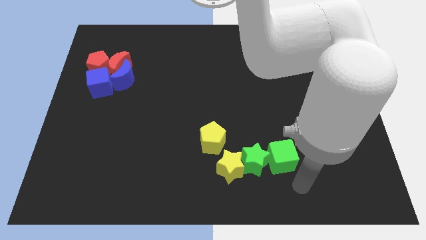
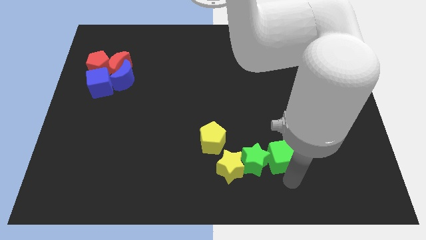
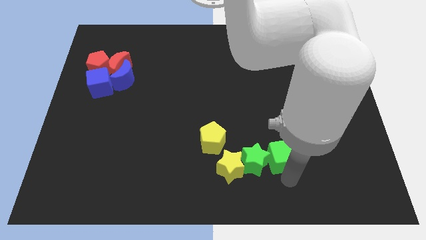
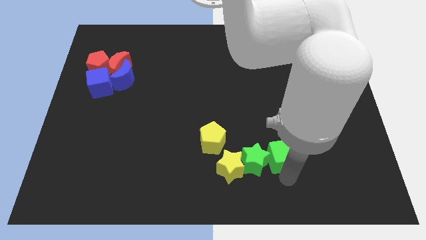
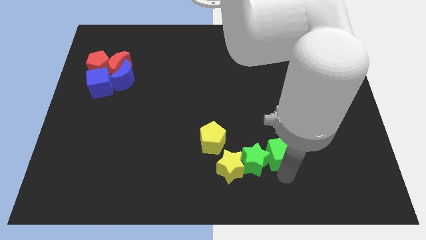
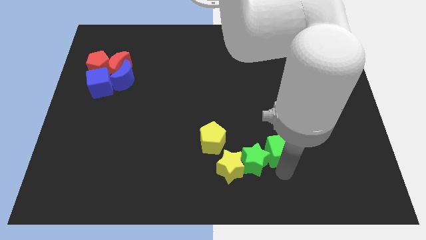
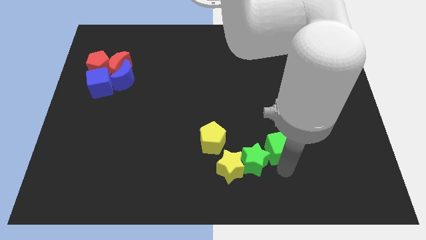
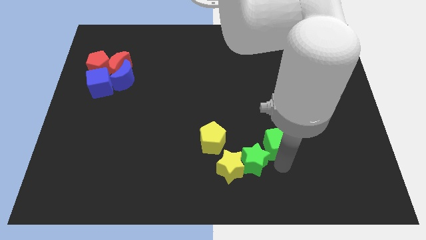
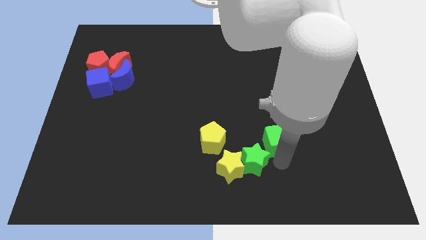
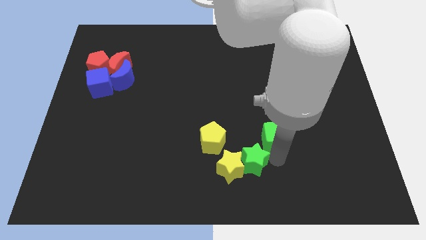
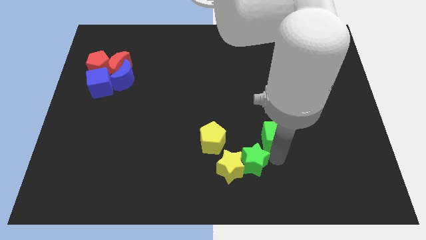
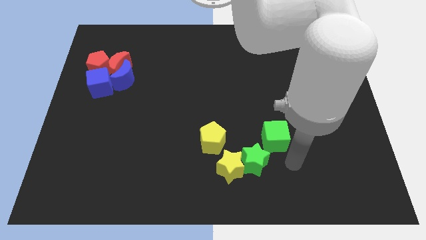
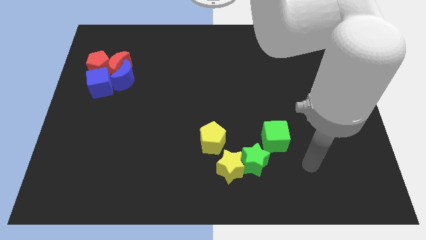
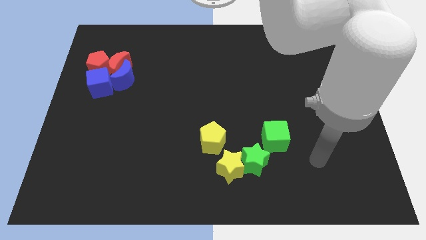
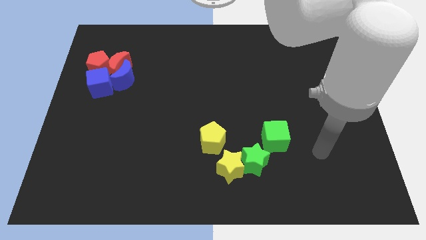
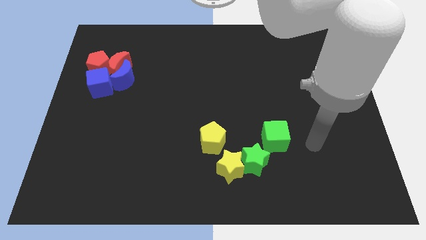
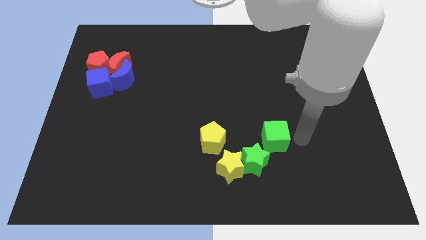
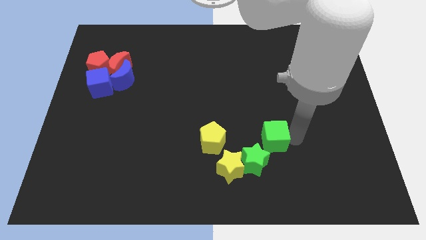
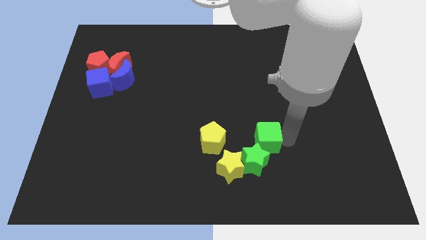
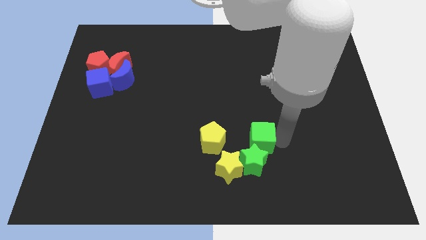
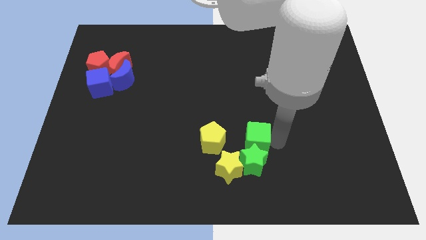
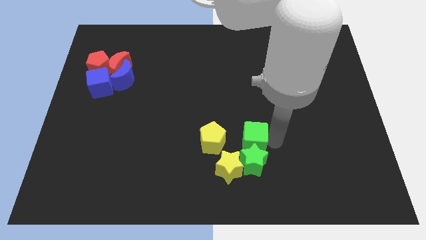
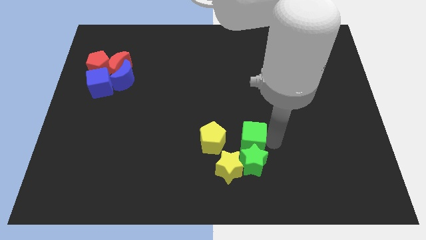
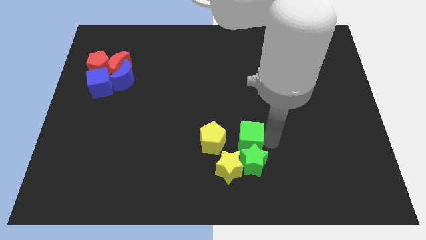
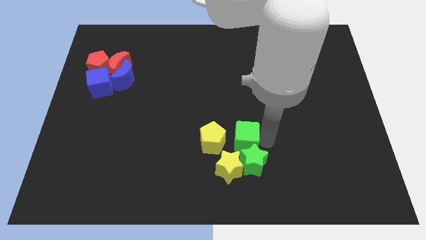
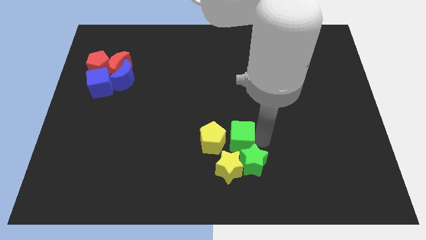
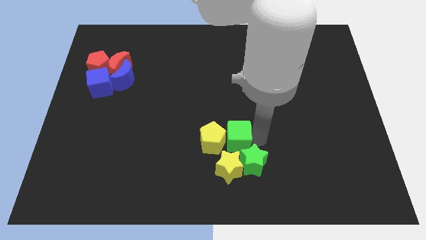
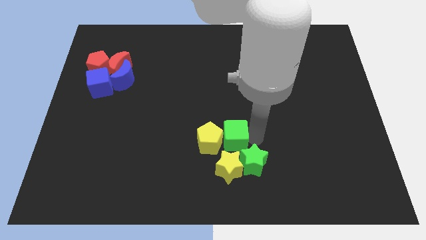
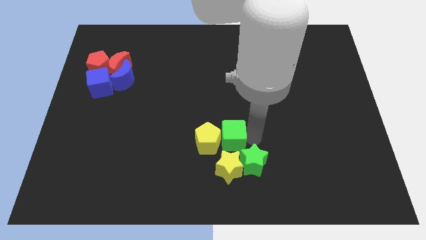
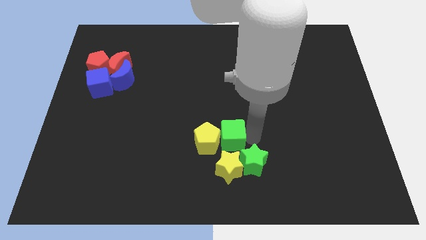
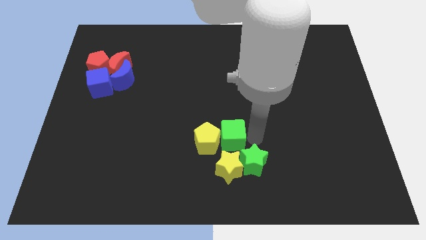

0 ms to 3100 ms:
slide the green cube into the right side of the yellow pentagon

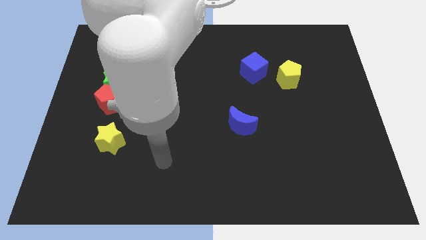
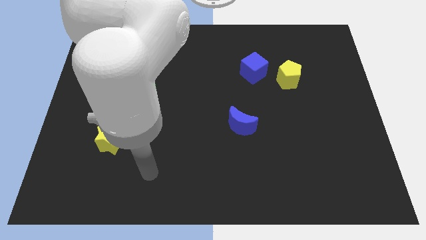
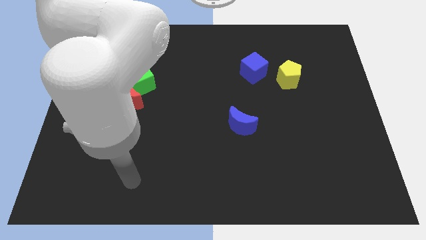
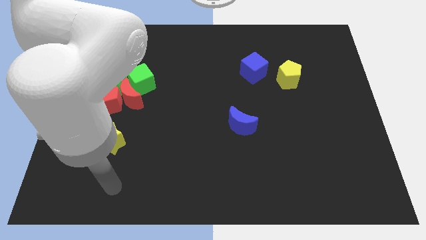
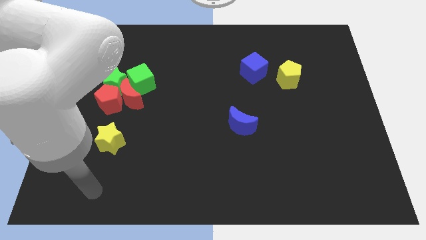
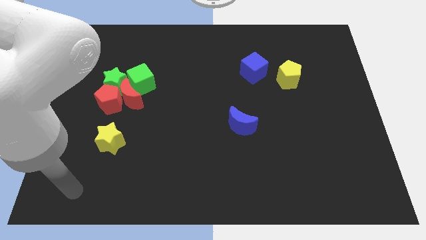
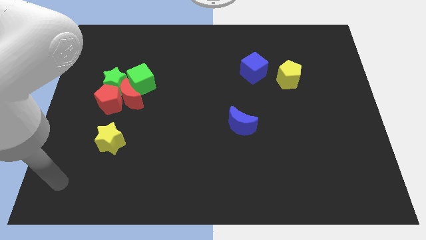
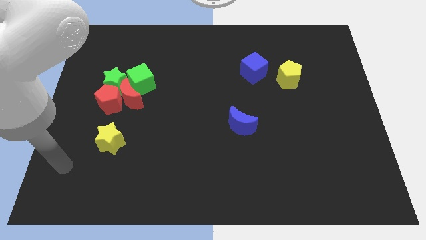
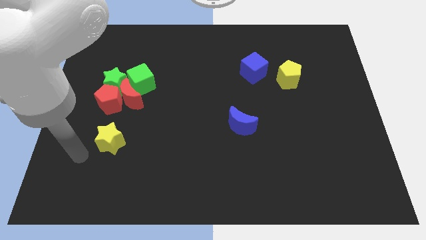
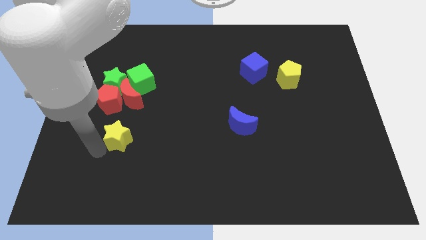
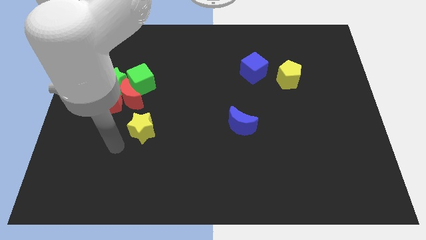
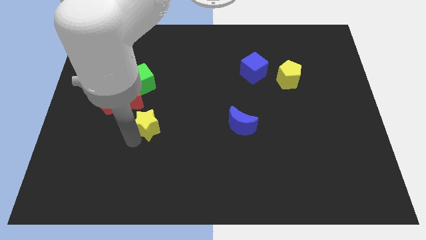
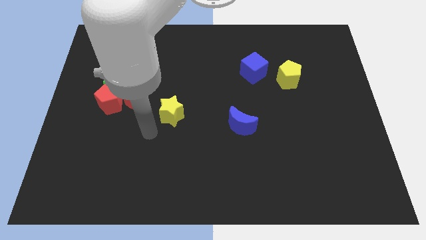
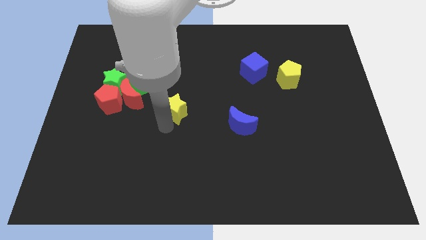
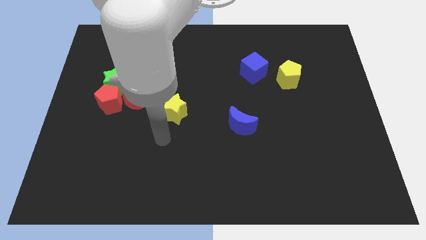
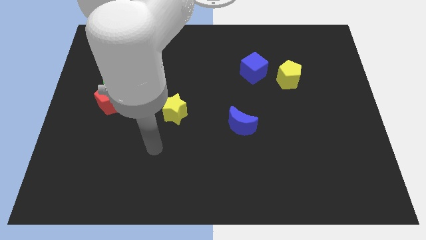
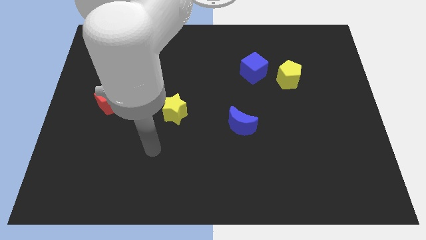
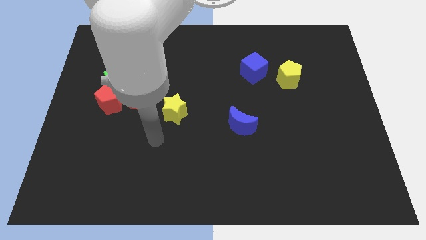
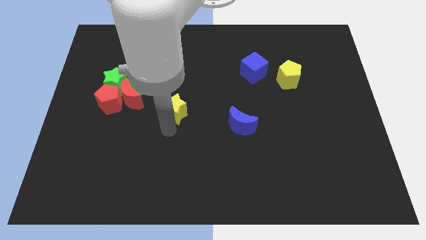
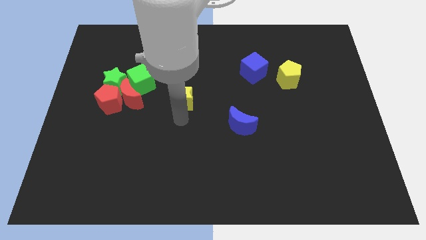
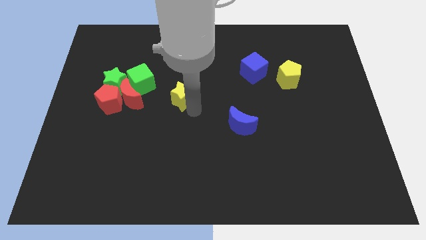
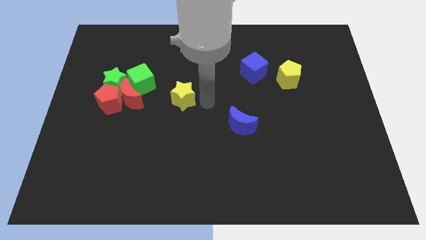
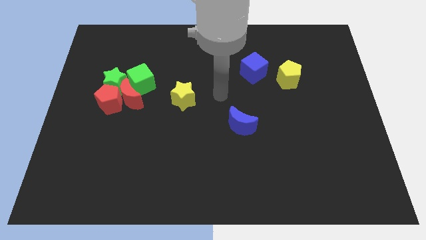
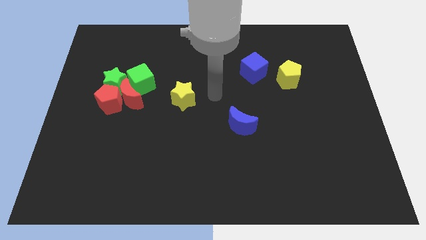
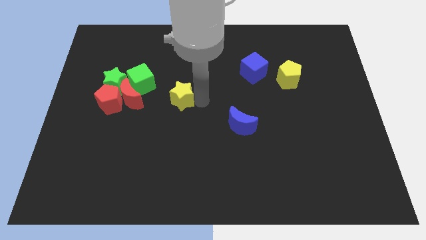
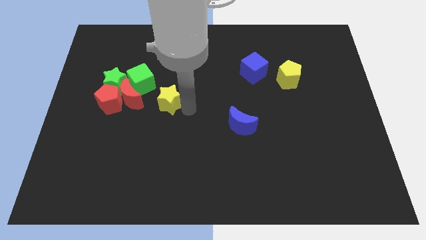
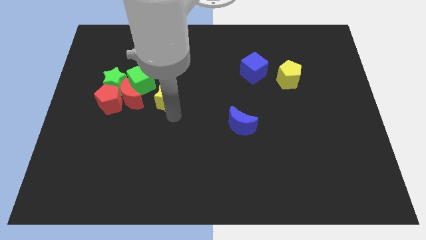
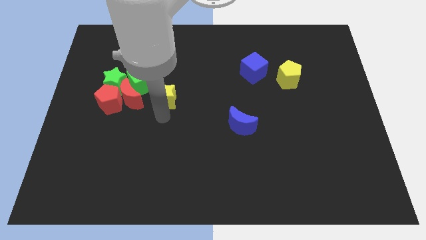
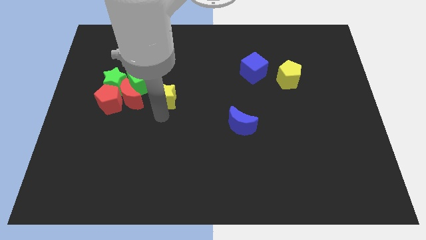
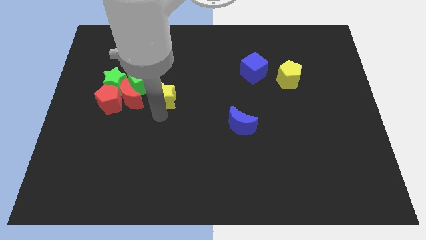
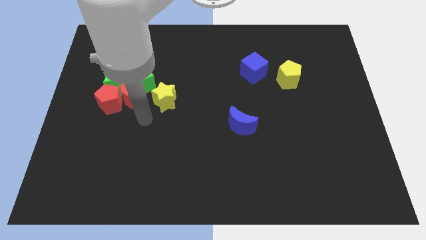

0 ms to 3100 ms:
move the yellow star to the bottom right of the green cube

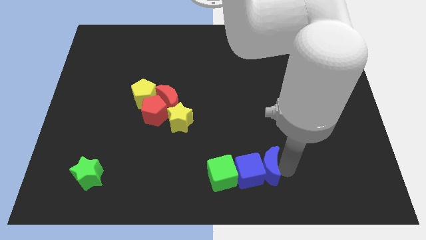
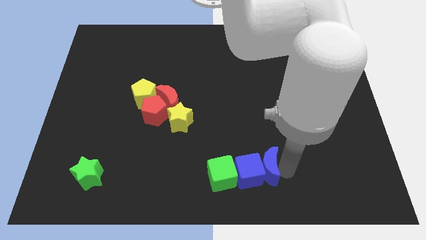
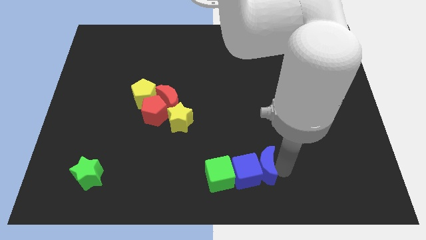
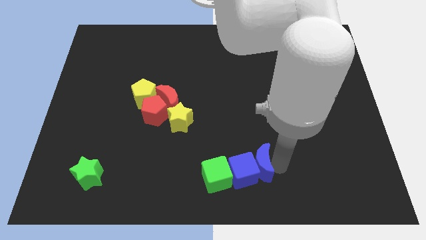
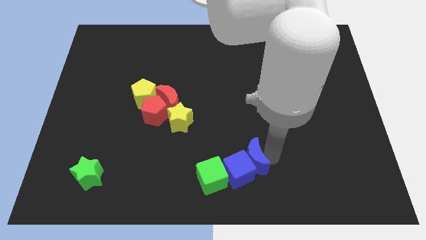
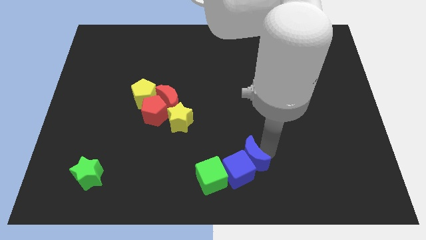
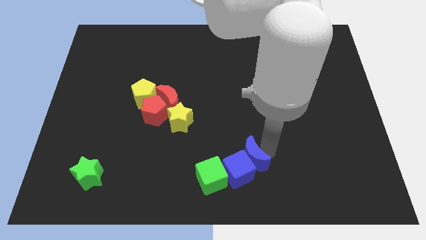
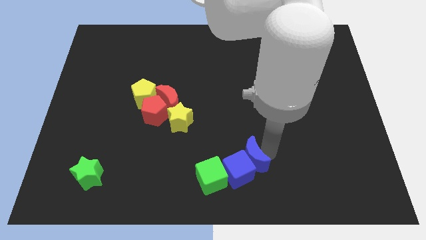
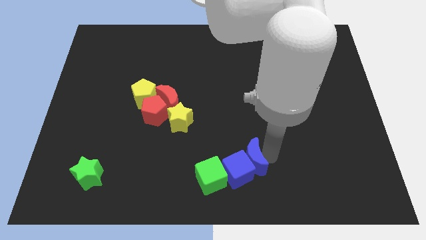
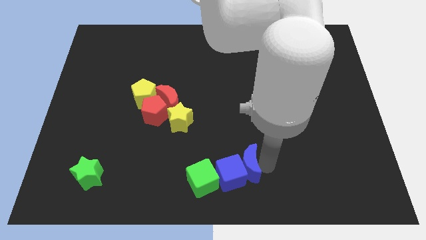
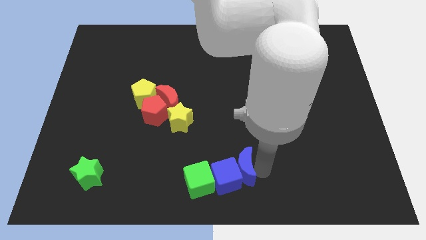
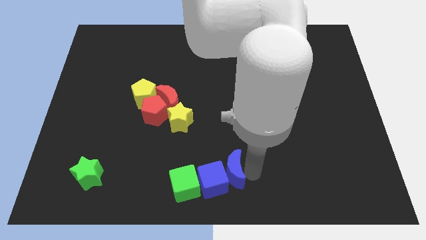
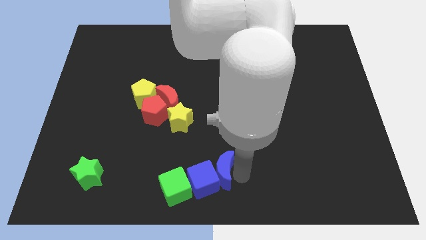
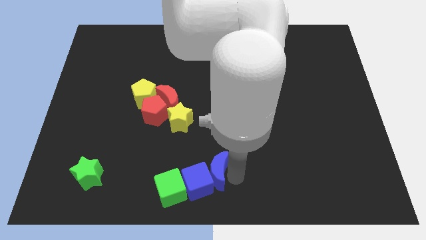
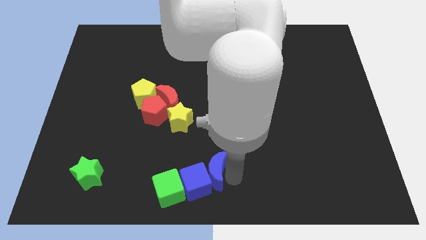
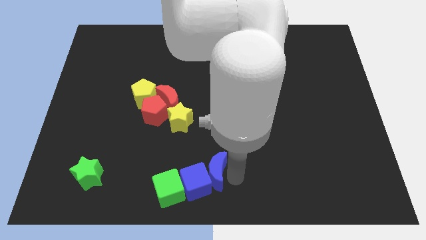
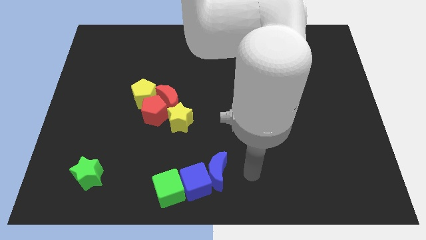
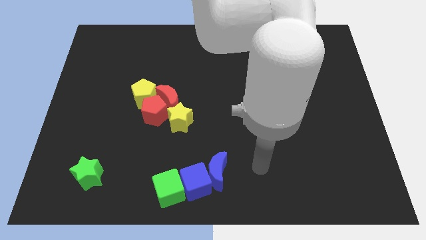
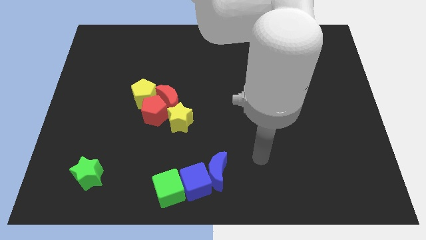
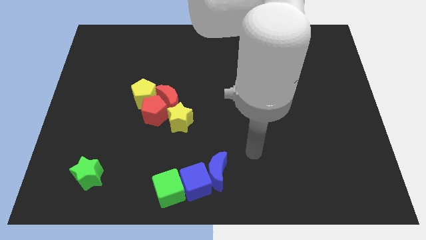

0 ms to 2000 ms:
push green and blue blocks with blue crescent

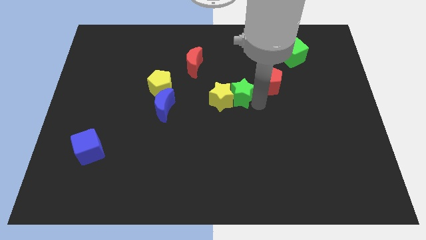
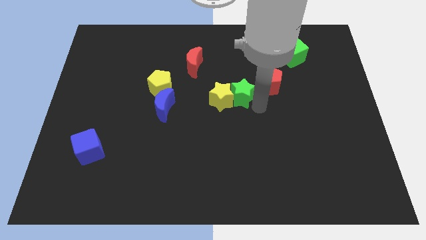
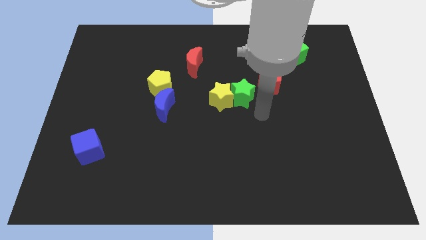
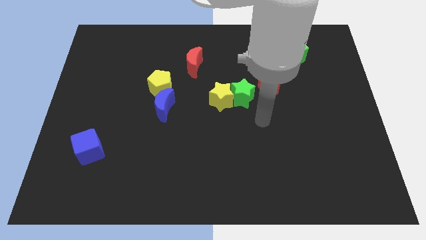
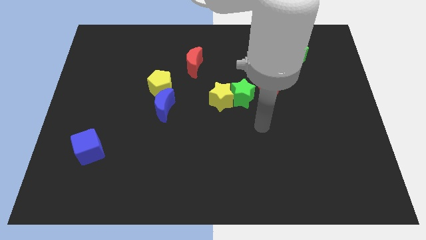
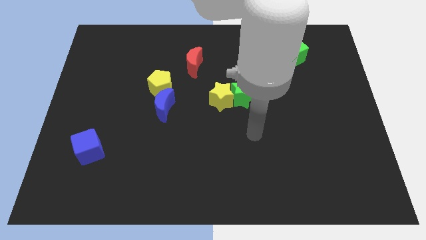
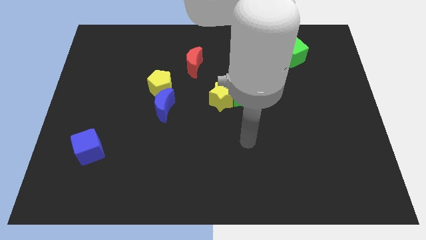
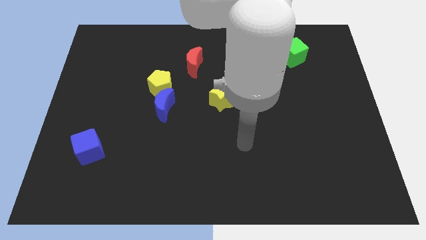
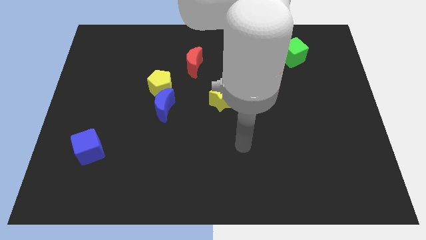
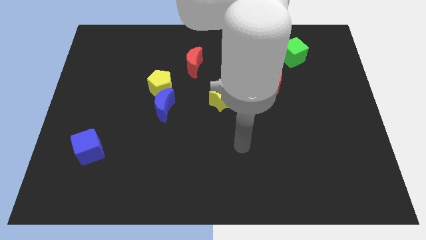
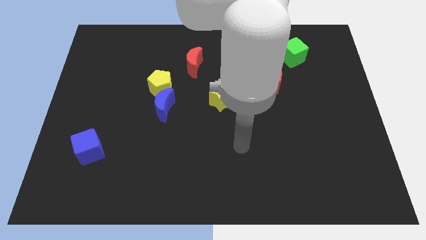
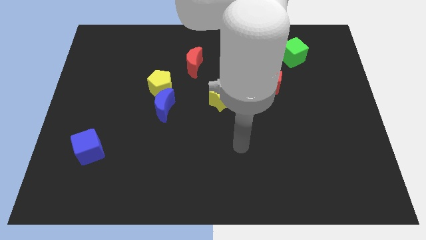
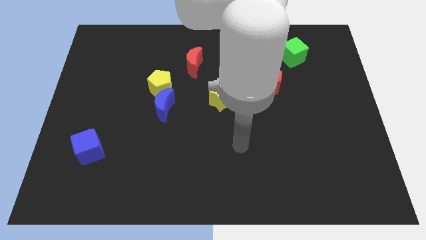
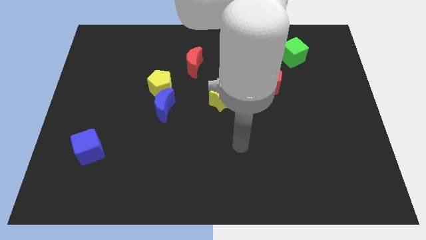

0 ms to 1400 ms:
take your hand away from the green star
